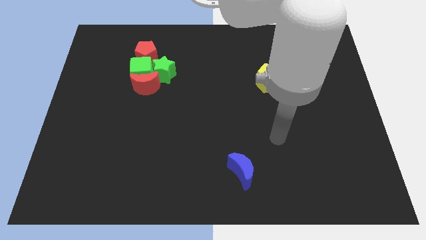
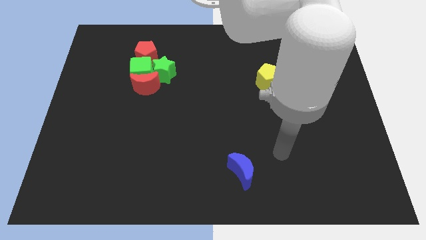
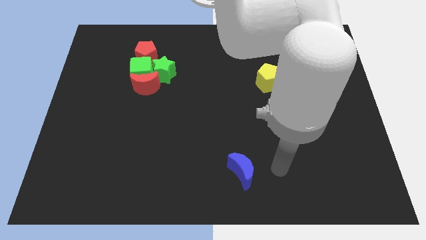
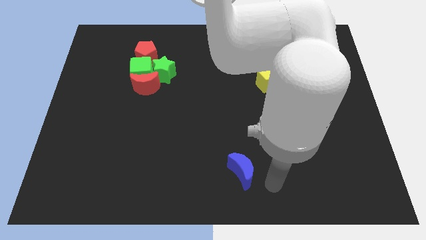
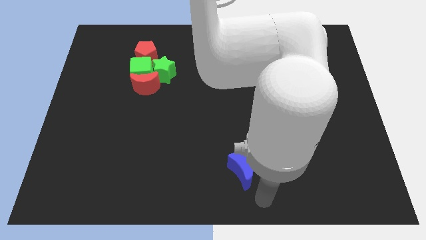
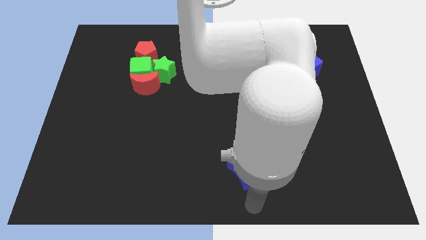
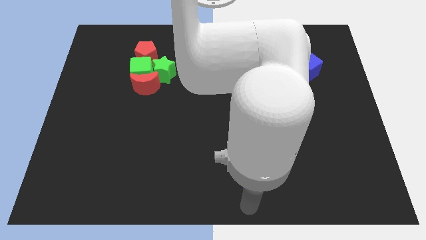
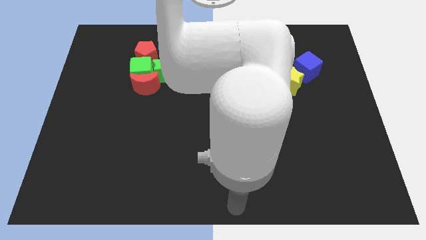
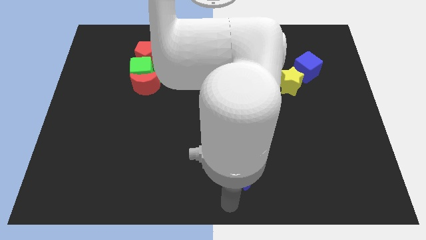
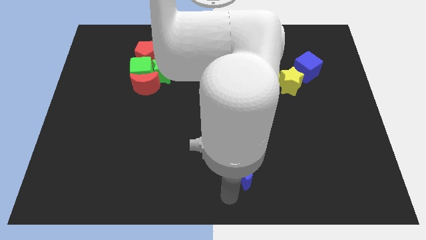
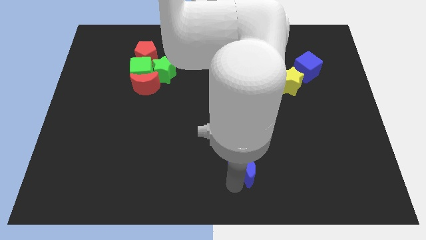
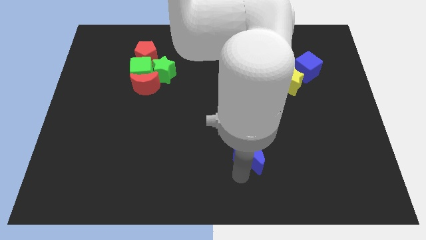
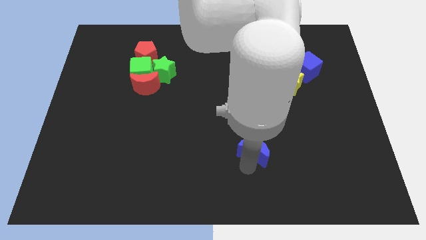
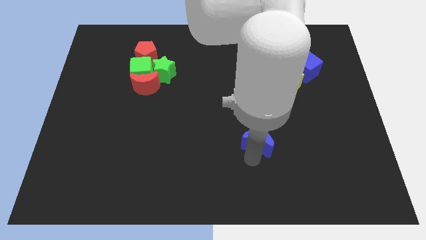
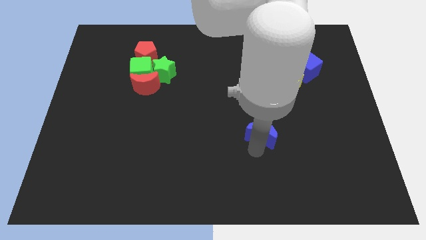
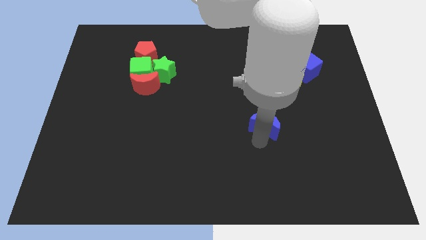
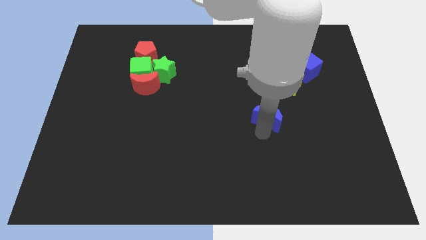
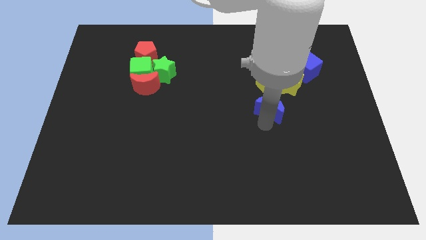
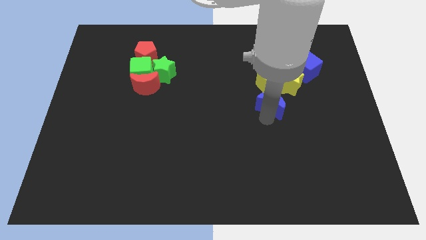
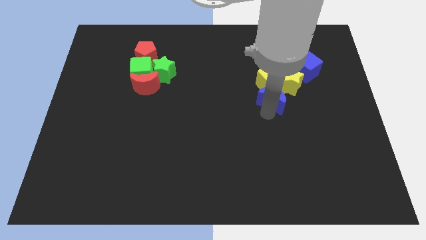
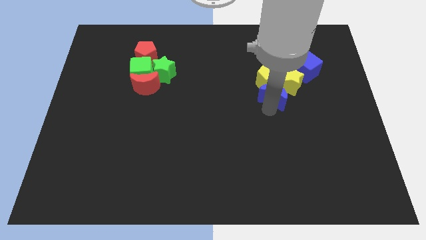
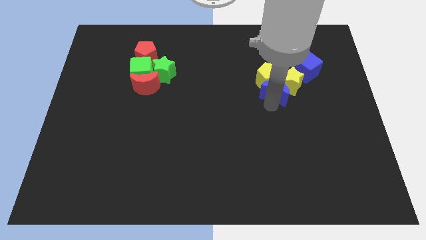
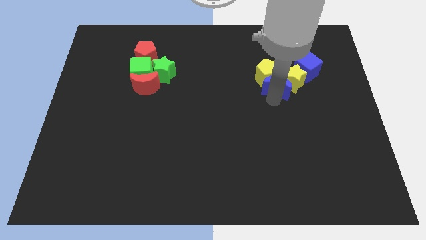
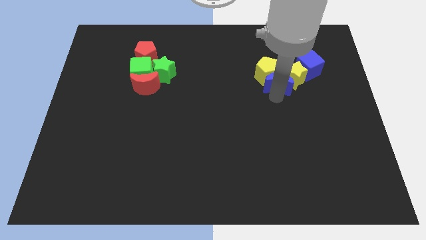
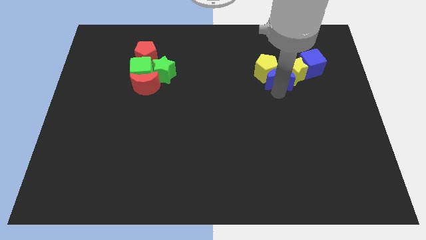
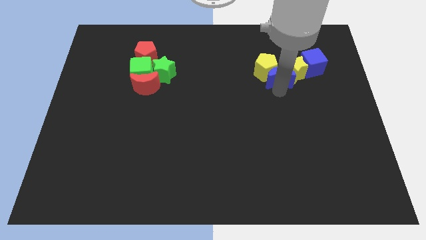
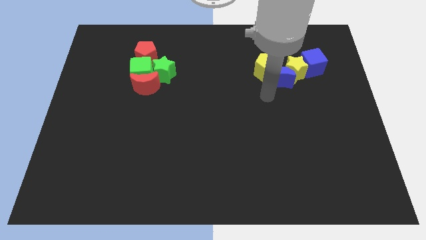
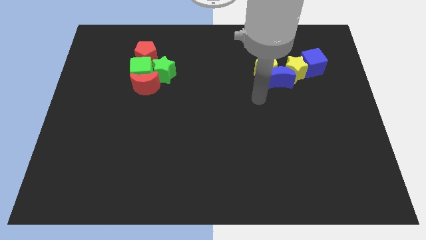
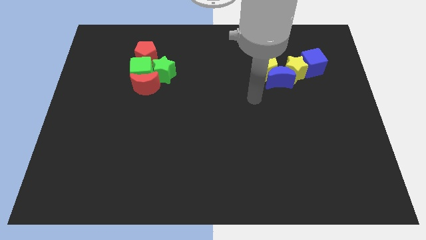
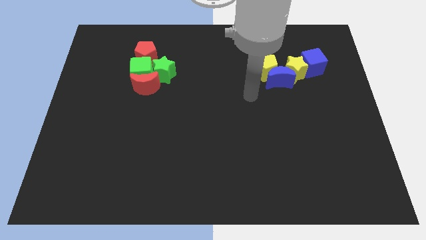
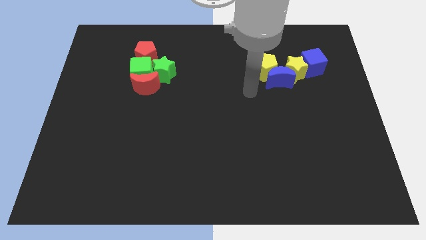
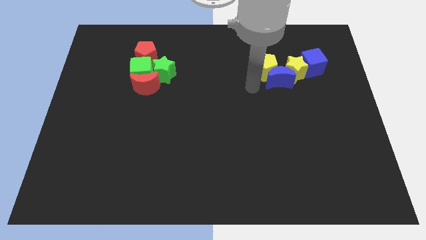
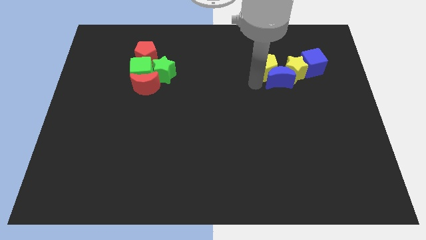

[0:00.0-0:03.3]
drag the blue moon into the yellow blocks

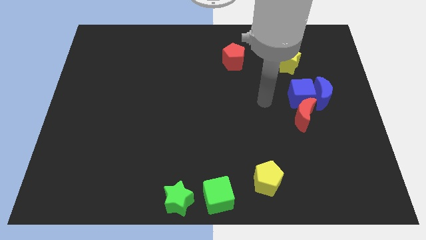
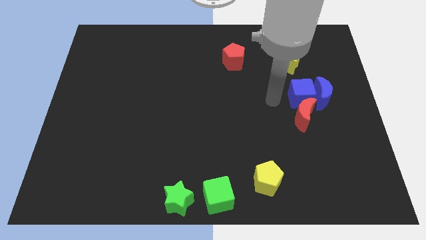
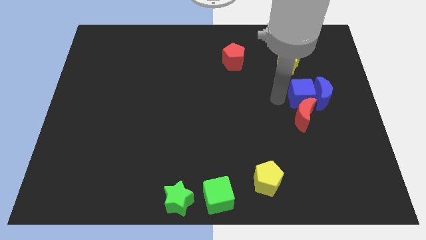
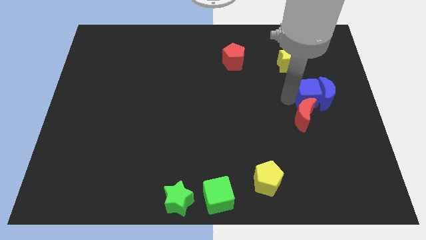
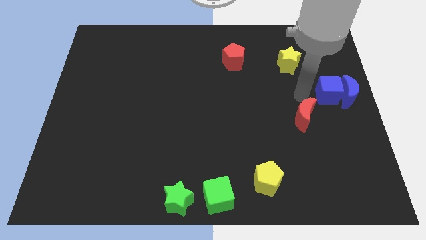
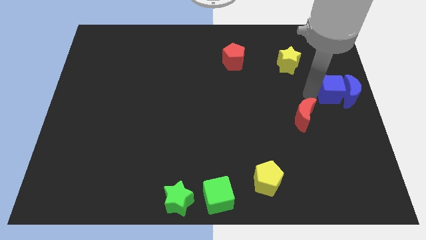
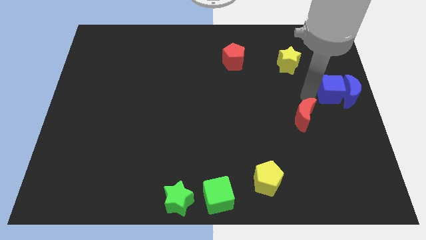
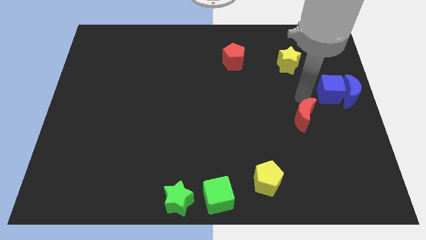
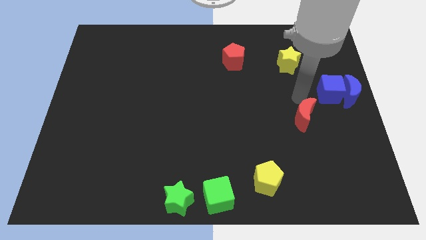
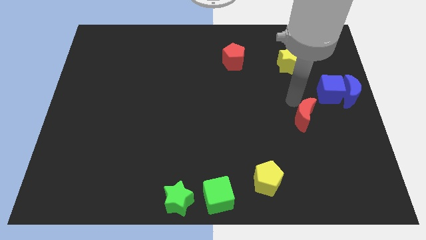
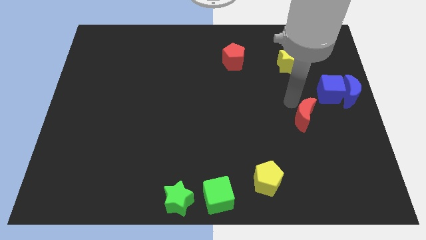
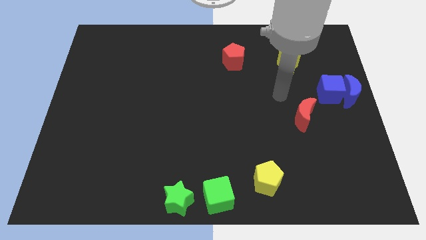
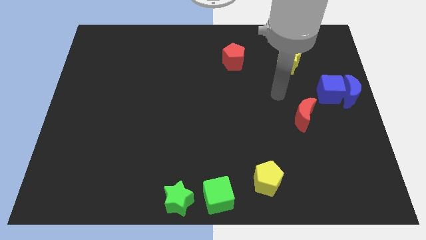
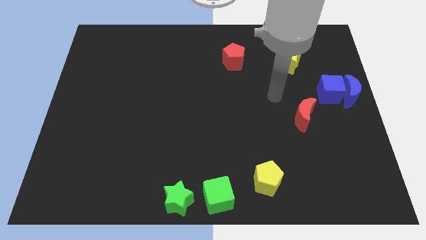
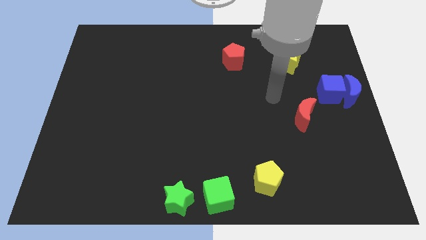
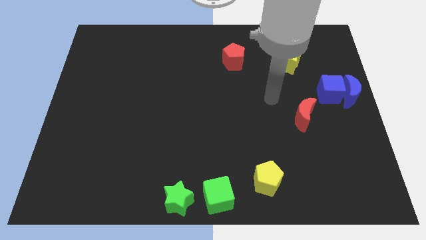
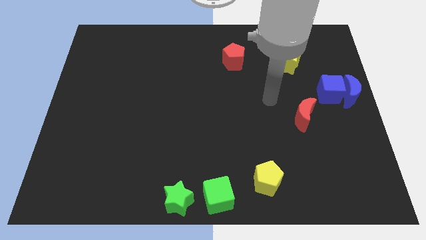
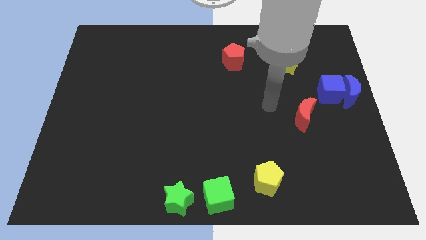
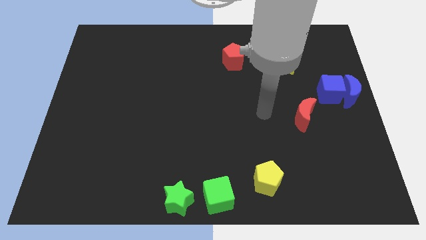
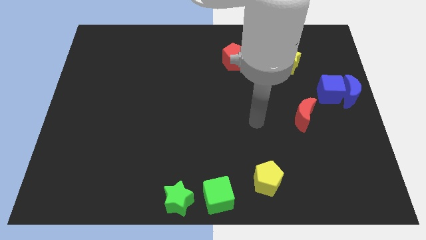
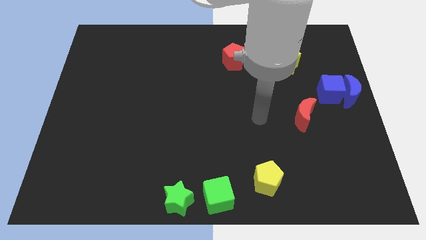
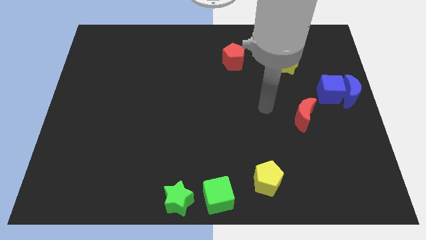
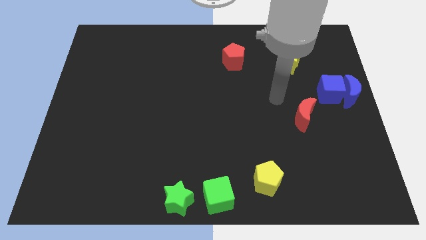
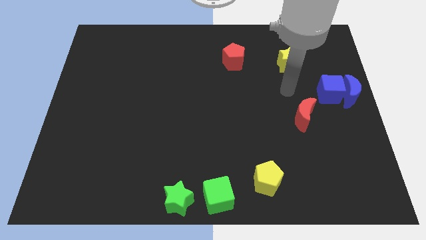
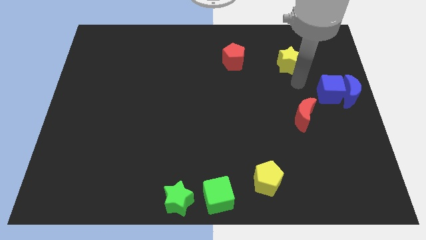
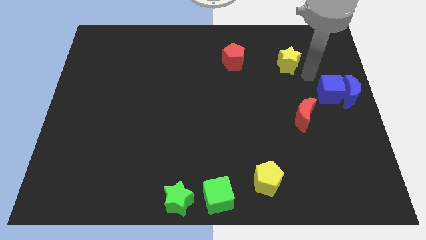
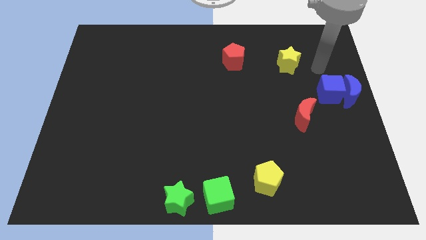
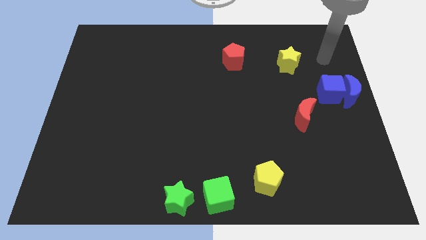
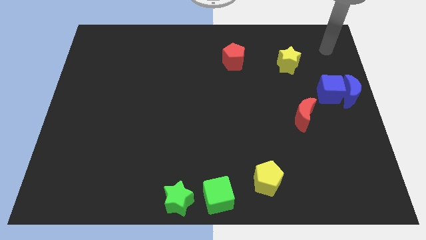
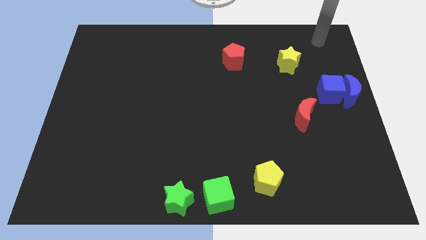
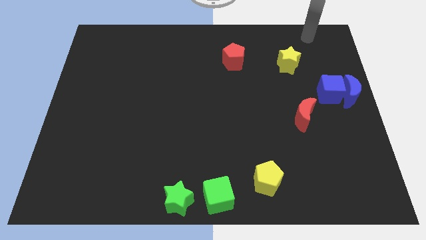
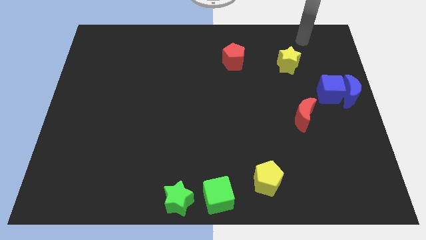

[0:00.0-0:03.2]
push the blue cube and blue moon towards right

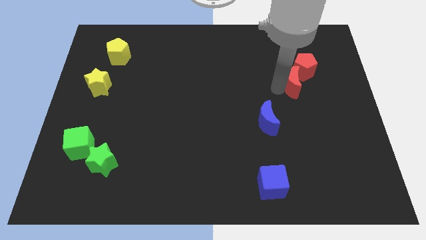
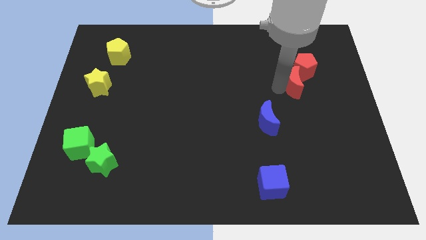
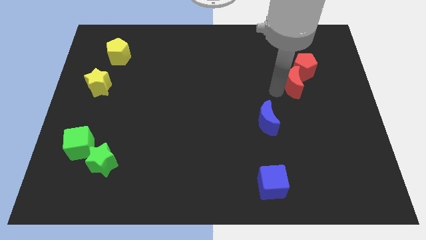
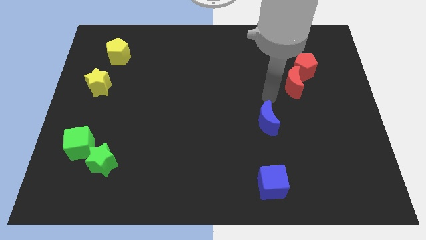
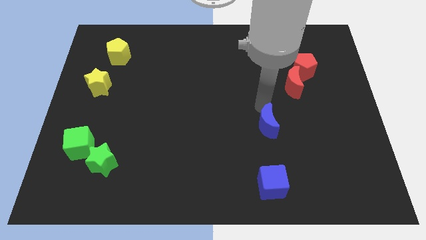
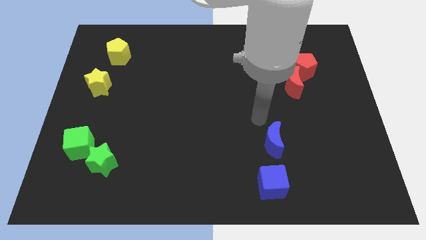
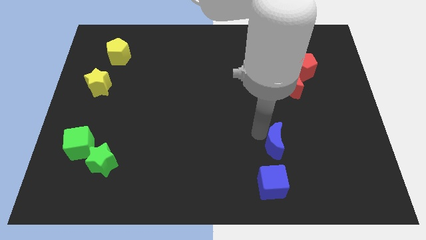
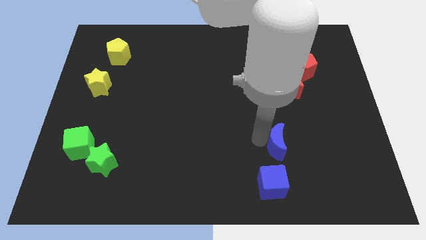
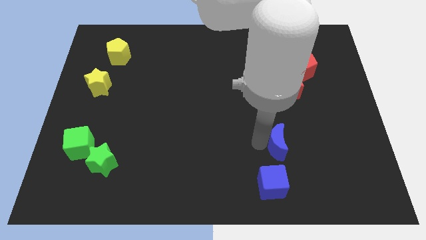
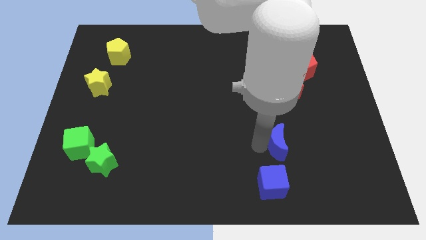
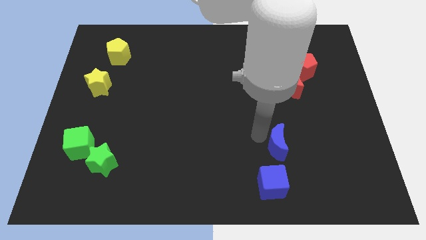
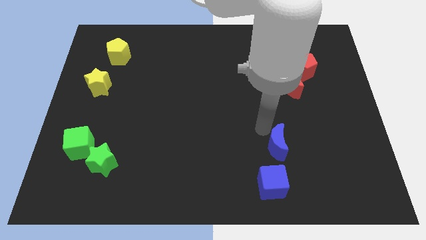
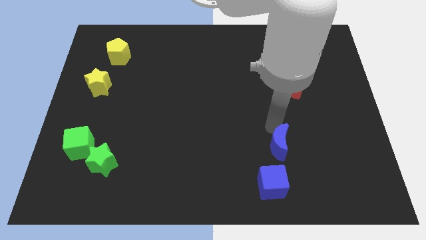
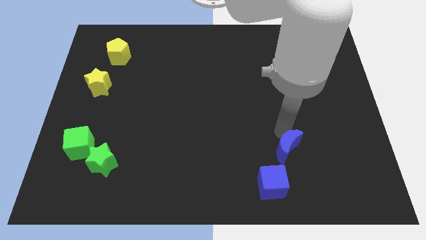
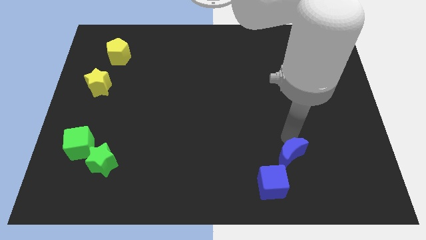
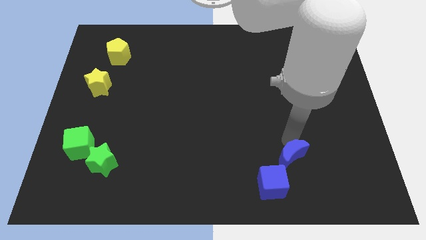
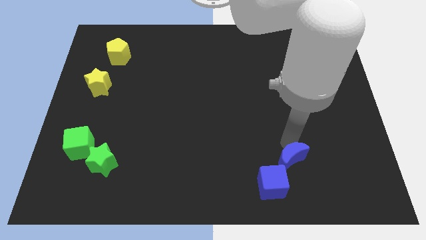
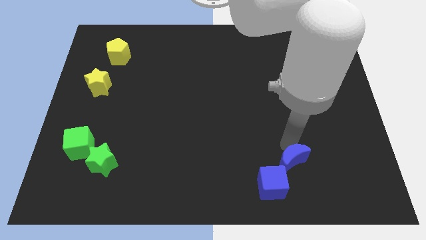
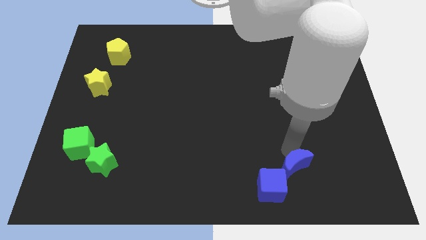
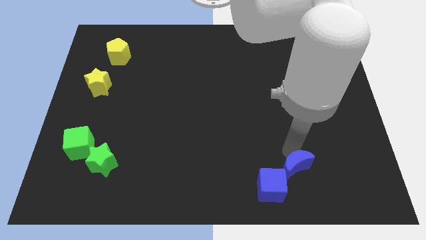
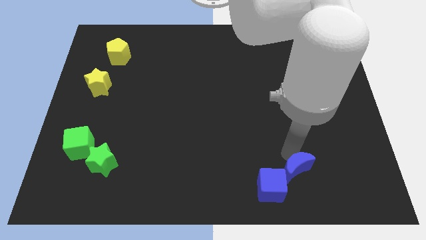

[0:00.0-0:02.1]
push blue moon to the top right of blue cube

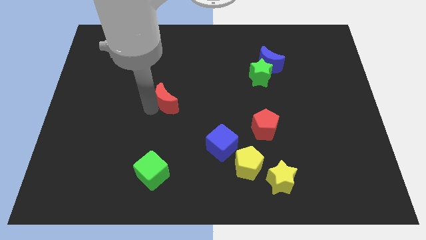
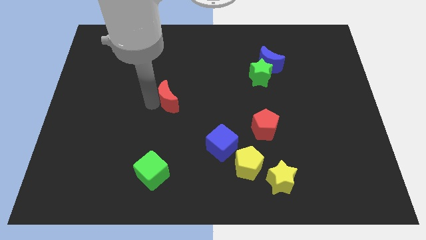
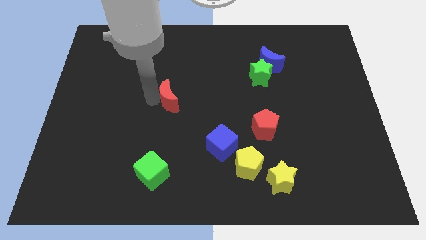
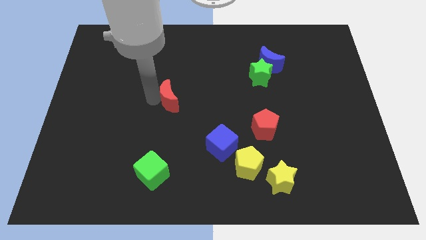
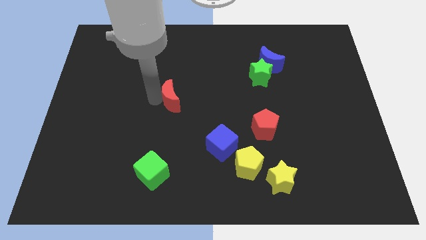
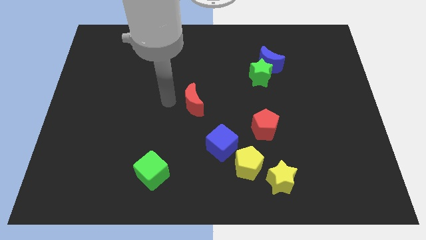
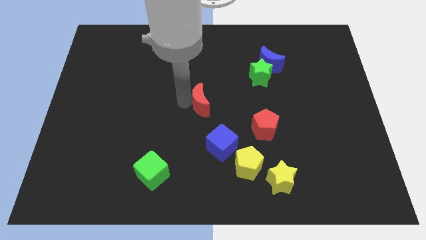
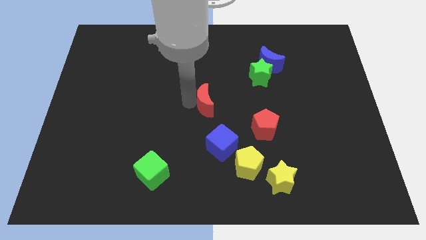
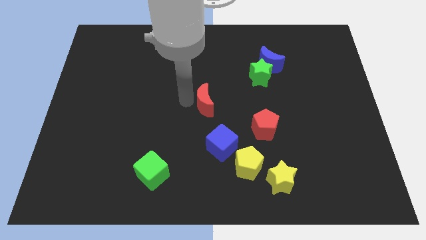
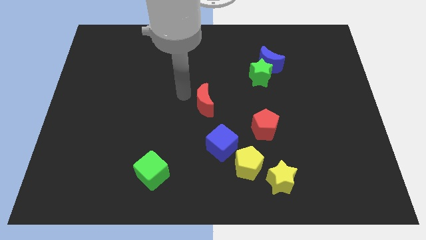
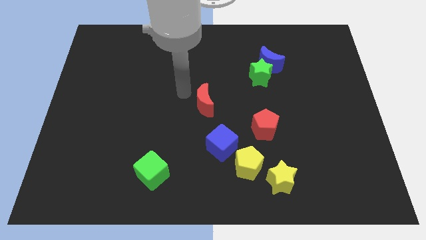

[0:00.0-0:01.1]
move the red moon to the center of the board
